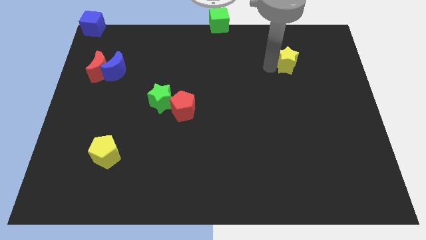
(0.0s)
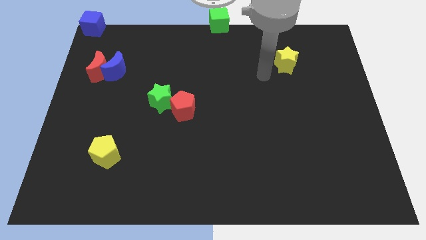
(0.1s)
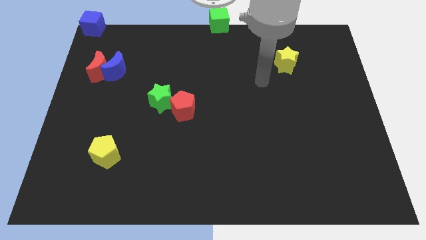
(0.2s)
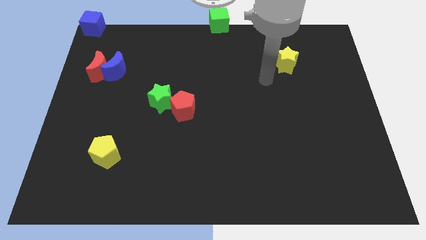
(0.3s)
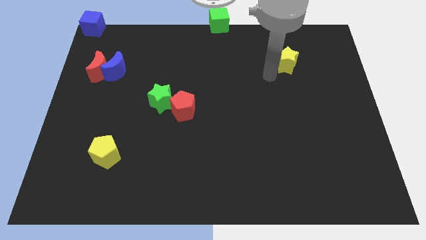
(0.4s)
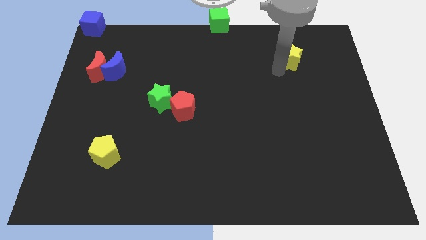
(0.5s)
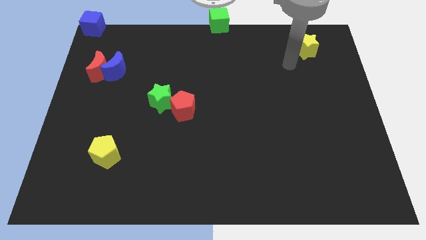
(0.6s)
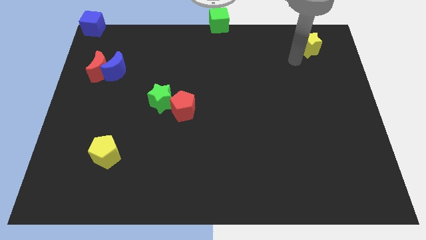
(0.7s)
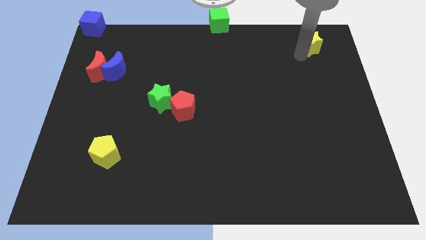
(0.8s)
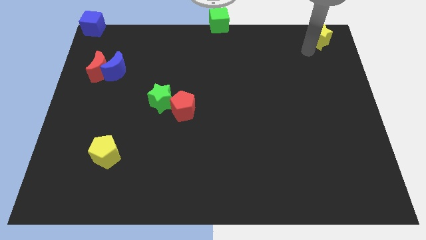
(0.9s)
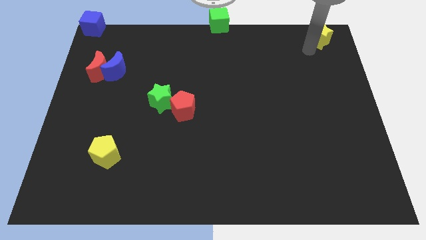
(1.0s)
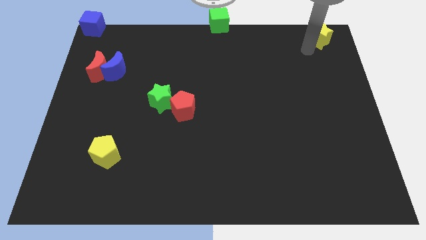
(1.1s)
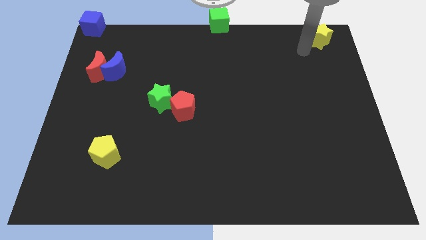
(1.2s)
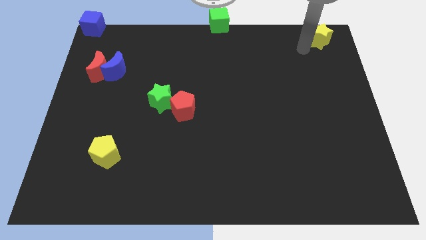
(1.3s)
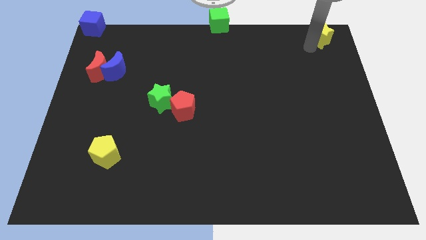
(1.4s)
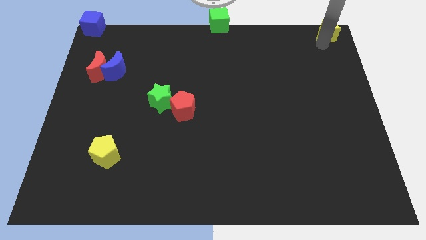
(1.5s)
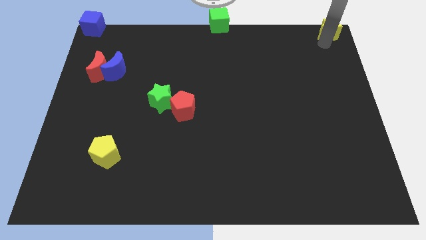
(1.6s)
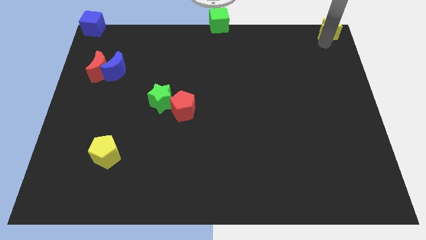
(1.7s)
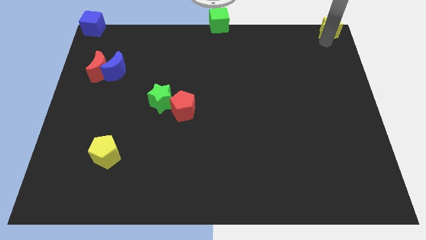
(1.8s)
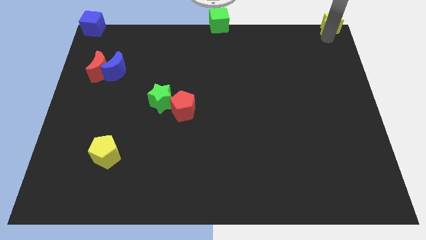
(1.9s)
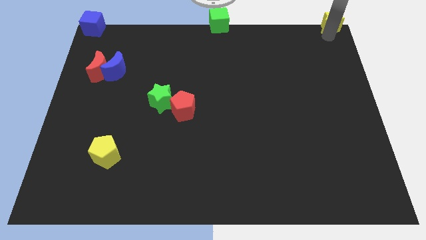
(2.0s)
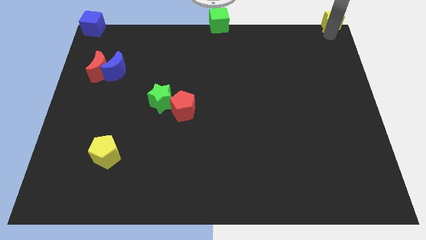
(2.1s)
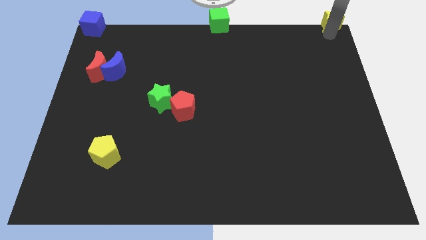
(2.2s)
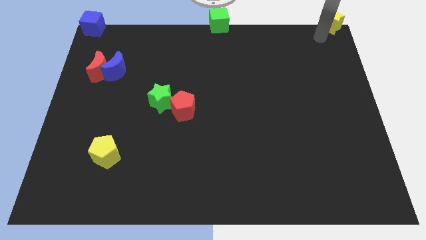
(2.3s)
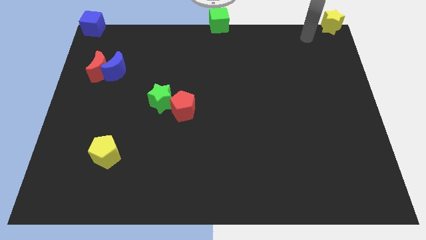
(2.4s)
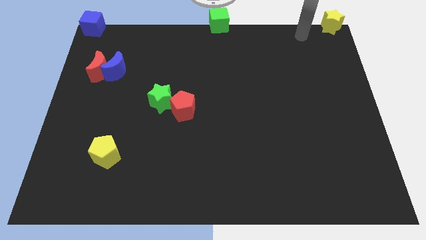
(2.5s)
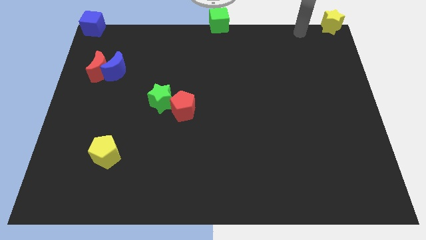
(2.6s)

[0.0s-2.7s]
place a yellow star to the top right corner of the board

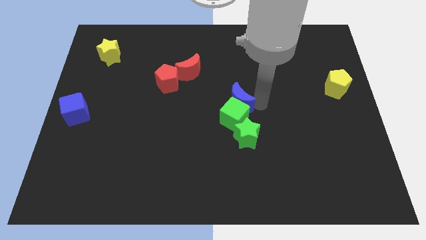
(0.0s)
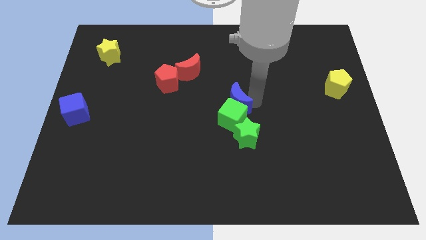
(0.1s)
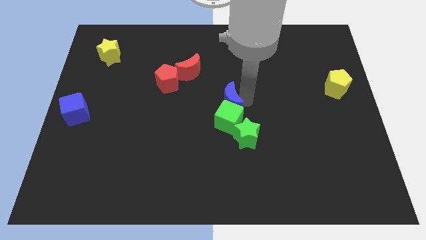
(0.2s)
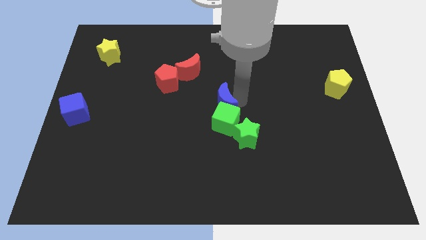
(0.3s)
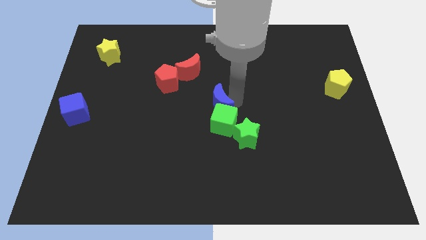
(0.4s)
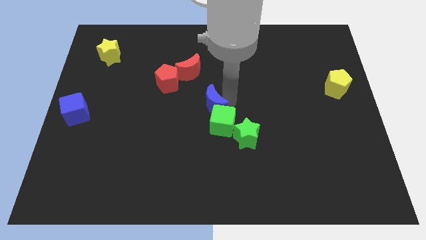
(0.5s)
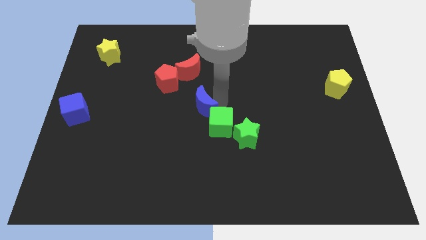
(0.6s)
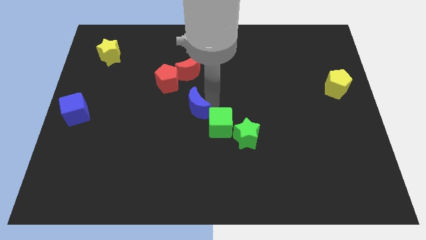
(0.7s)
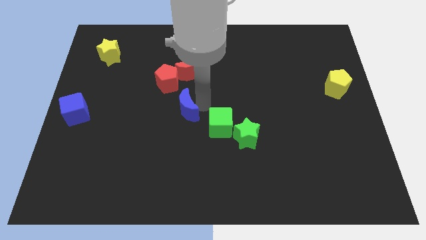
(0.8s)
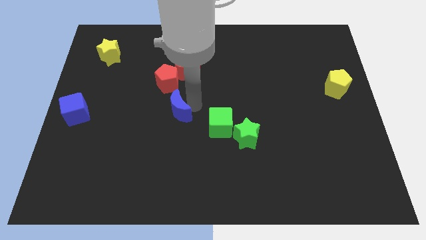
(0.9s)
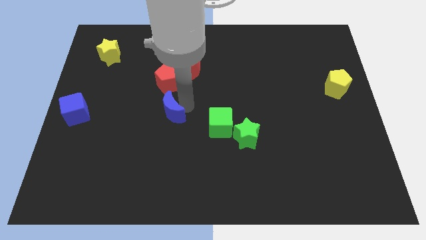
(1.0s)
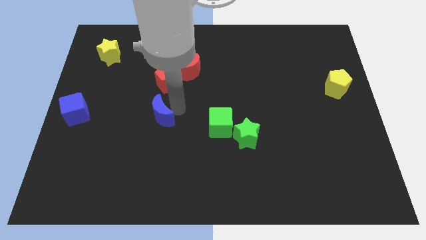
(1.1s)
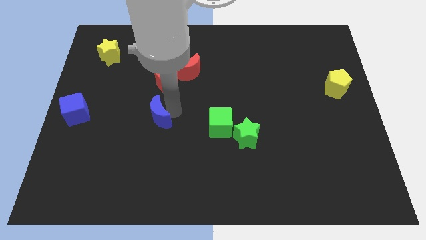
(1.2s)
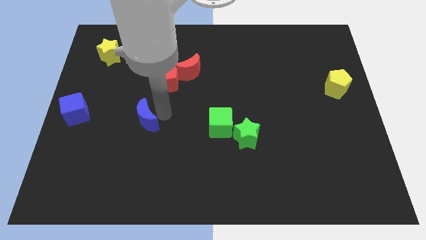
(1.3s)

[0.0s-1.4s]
place blue moon to the bottom of red pentagon

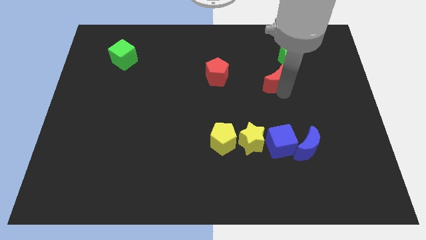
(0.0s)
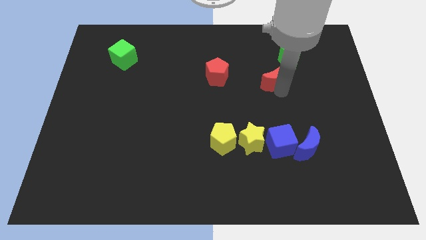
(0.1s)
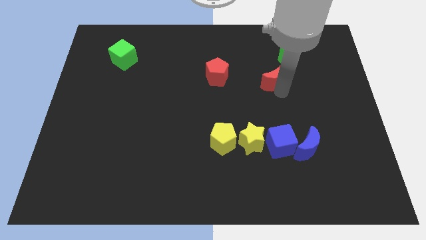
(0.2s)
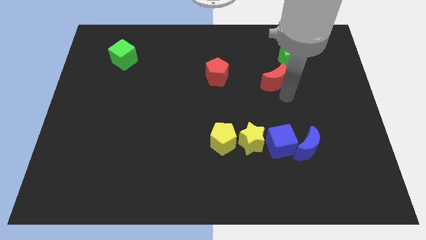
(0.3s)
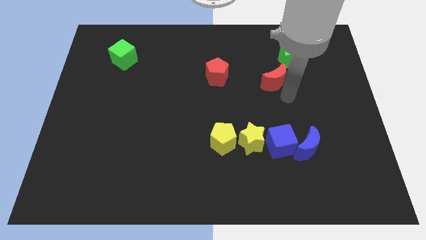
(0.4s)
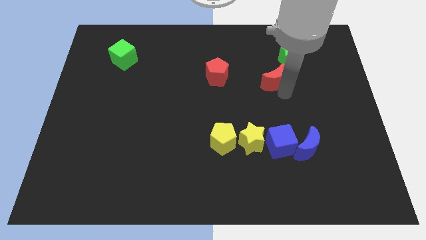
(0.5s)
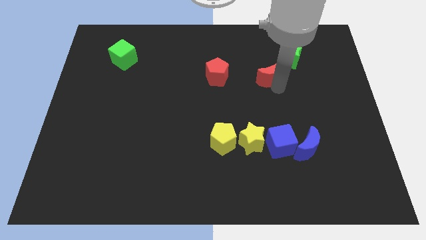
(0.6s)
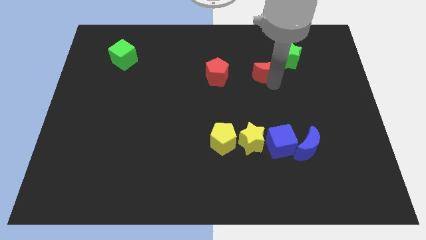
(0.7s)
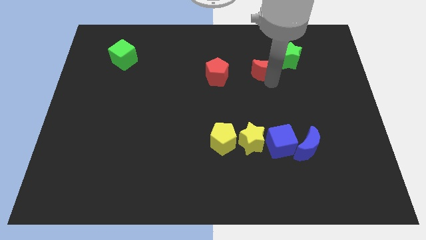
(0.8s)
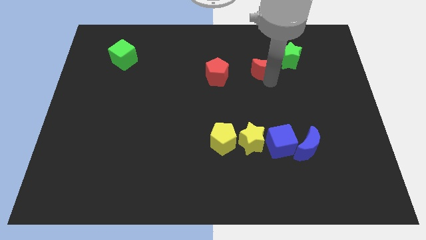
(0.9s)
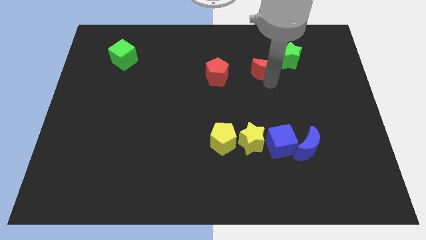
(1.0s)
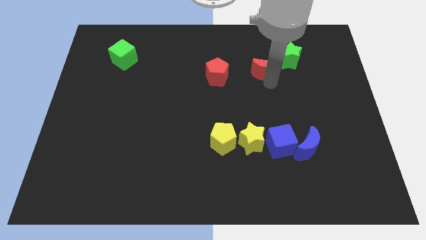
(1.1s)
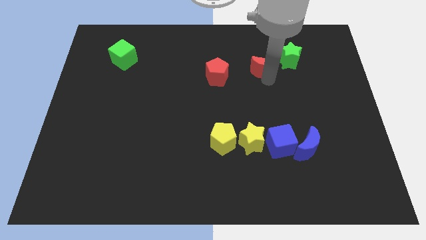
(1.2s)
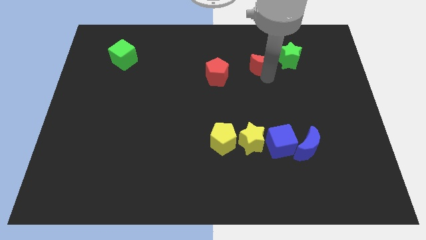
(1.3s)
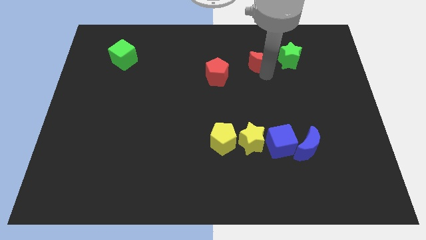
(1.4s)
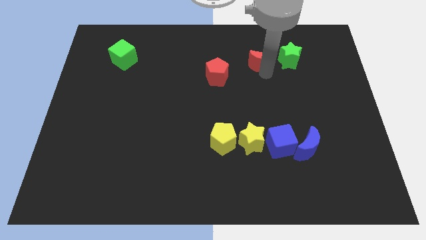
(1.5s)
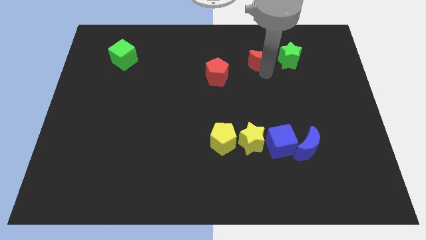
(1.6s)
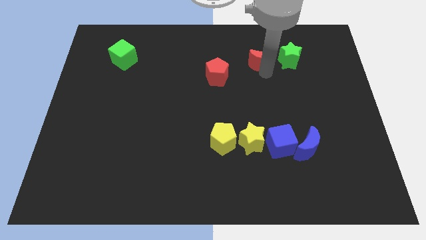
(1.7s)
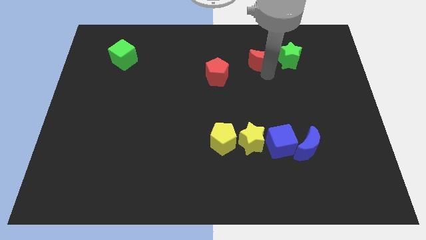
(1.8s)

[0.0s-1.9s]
place the red crescent left to the green star

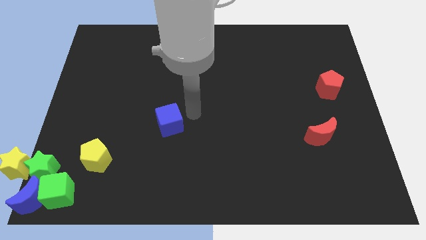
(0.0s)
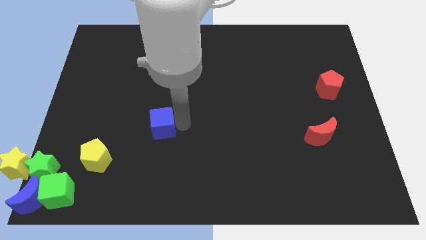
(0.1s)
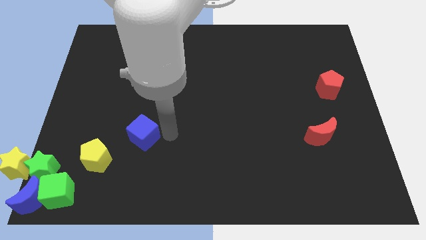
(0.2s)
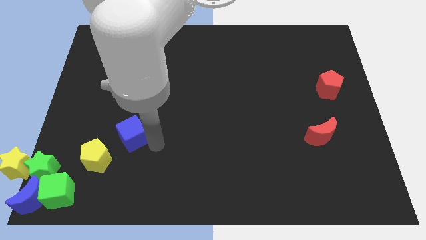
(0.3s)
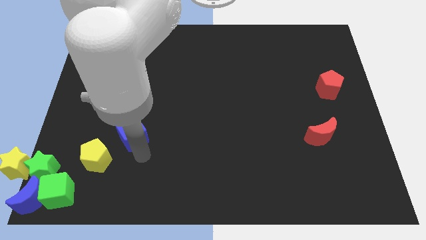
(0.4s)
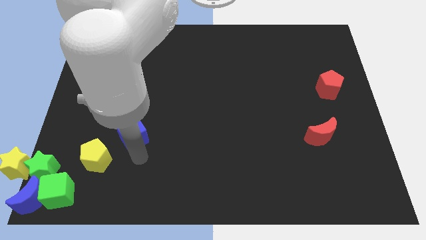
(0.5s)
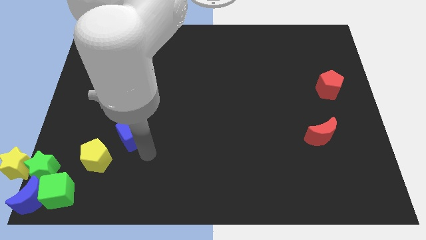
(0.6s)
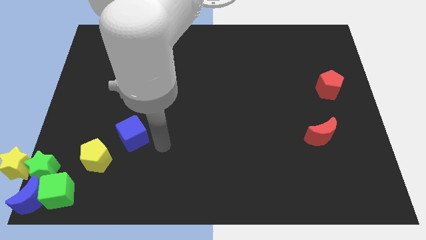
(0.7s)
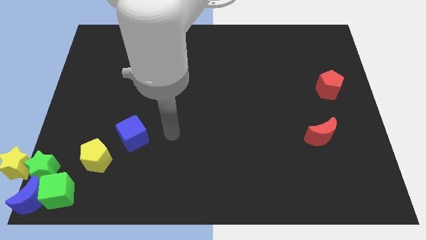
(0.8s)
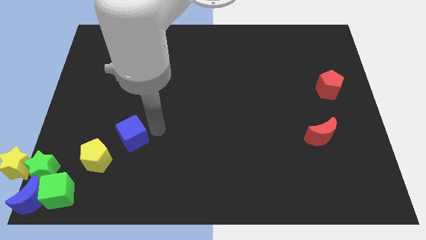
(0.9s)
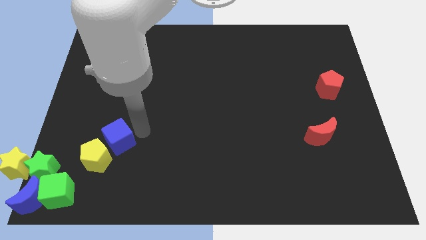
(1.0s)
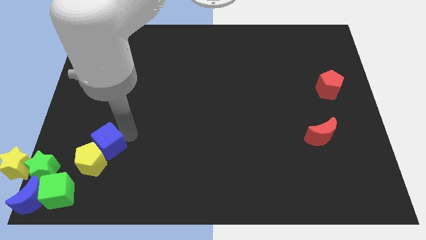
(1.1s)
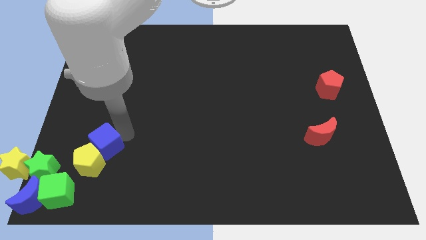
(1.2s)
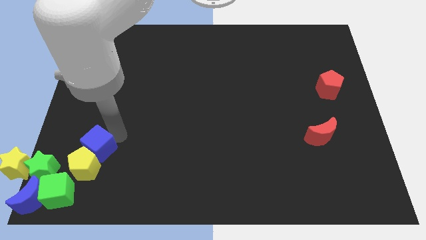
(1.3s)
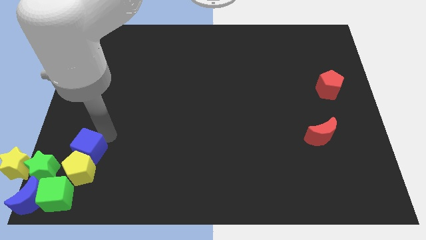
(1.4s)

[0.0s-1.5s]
move the blue cube into the yellow pentagon

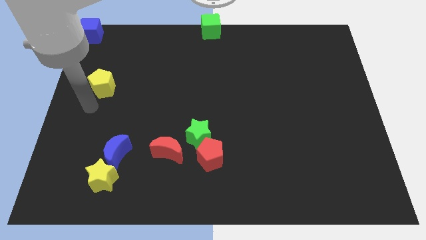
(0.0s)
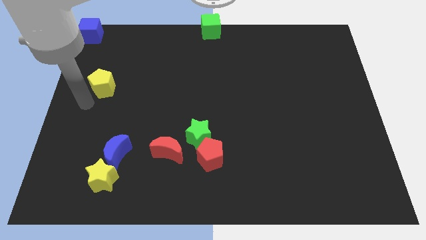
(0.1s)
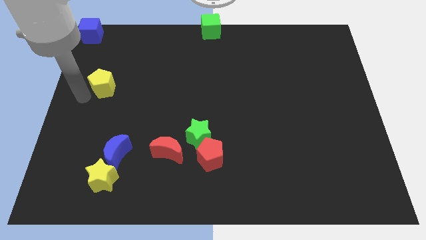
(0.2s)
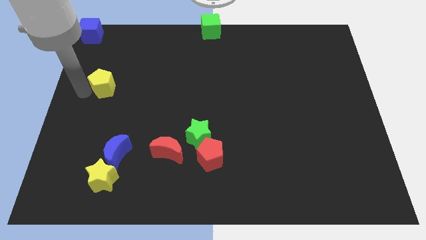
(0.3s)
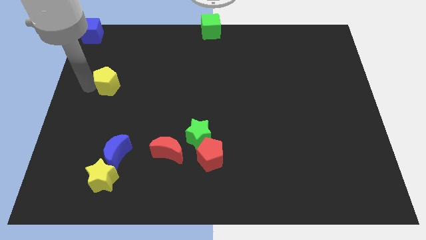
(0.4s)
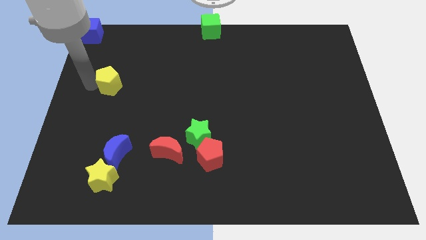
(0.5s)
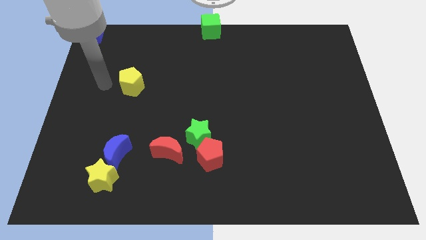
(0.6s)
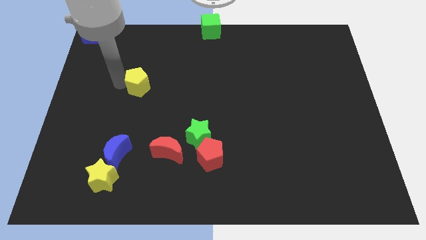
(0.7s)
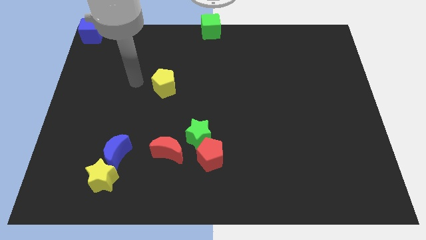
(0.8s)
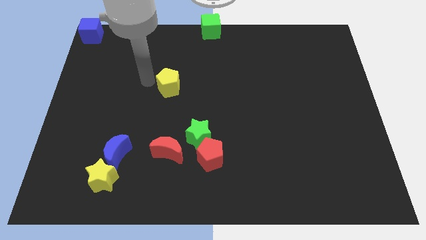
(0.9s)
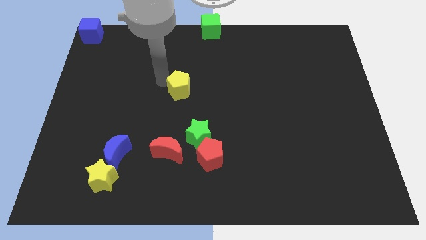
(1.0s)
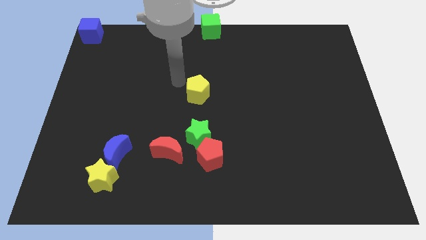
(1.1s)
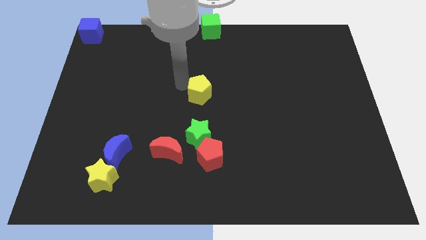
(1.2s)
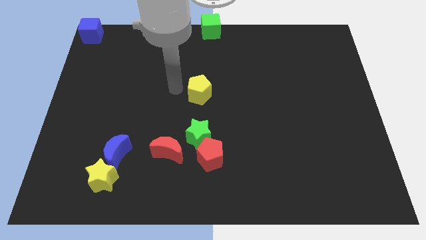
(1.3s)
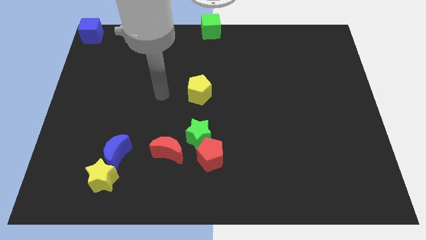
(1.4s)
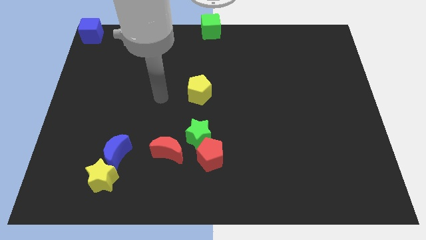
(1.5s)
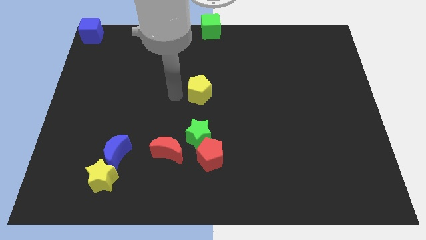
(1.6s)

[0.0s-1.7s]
place the yellow pentagon vertically to the green star
